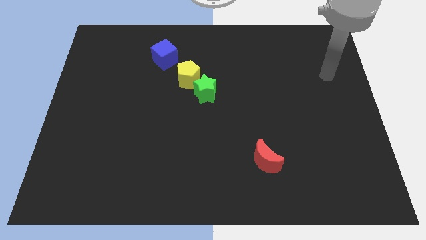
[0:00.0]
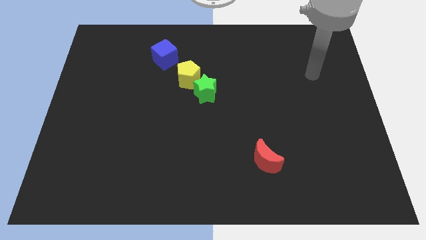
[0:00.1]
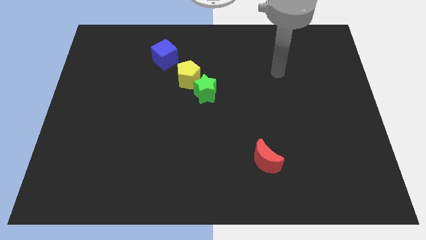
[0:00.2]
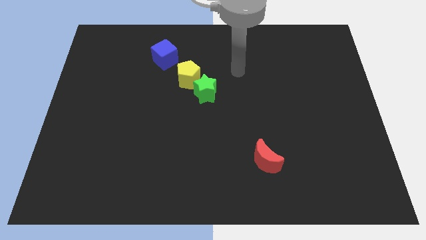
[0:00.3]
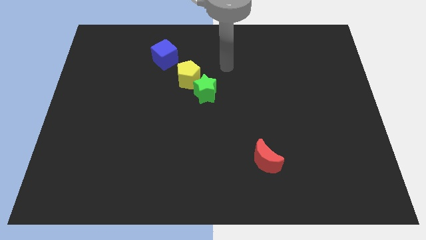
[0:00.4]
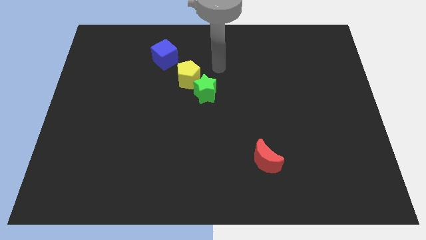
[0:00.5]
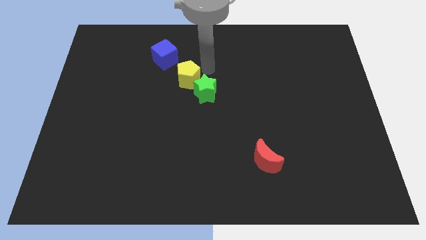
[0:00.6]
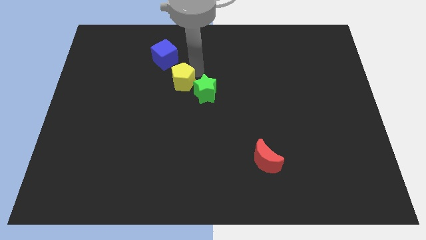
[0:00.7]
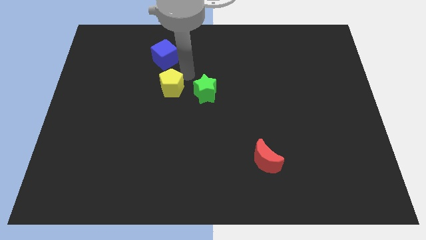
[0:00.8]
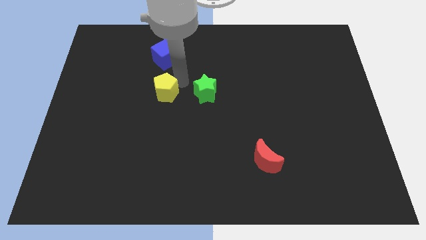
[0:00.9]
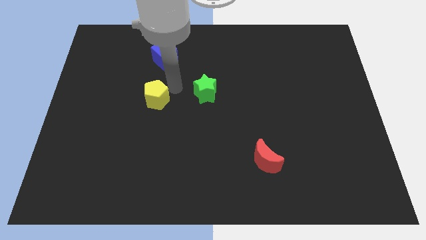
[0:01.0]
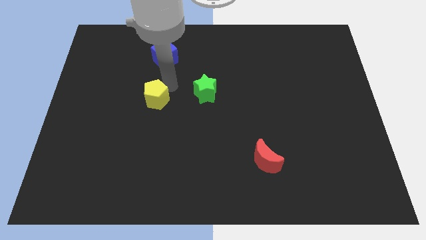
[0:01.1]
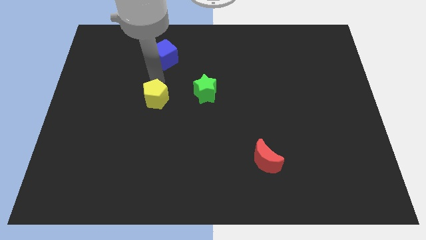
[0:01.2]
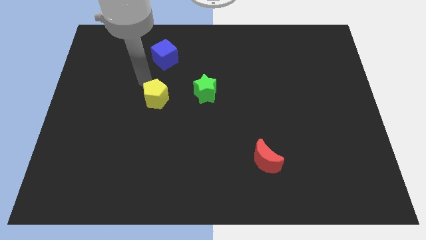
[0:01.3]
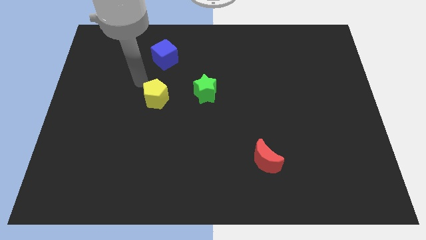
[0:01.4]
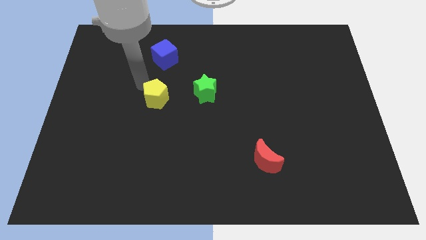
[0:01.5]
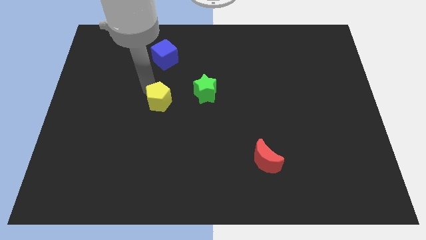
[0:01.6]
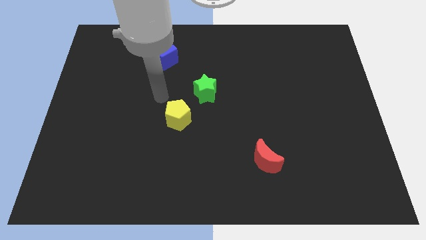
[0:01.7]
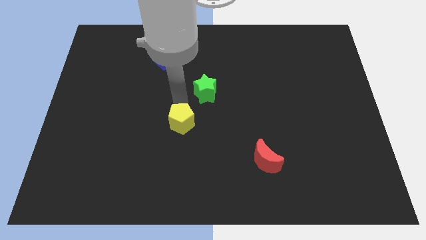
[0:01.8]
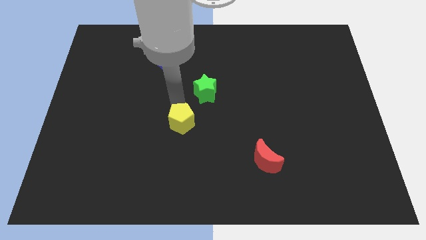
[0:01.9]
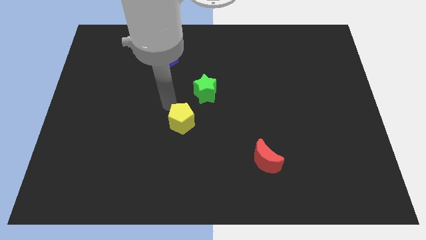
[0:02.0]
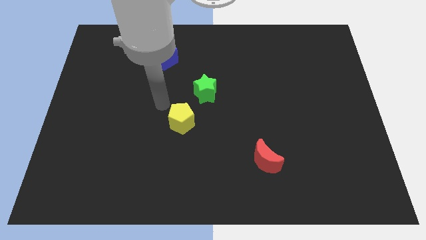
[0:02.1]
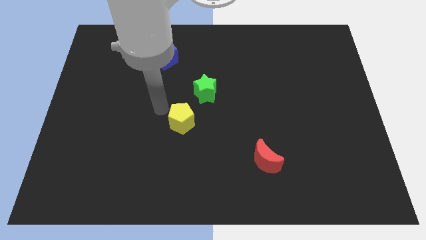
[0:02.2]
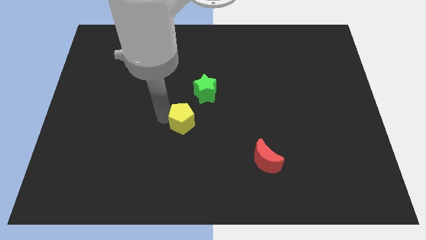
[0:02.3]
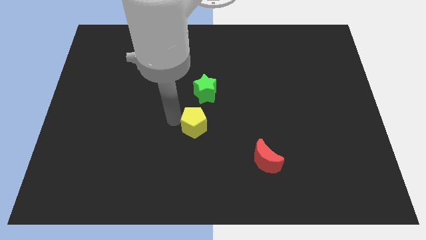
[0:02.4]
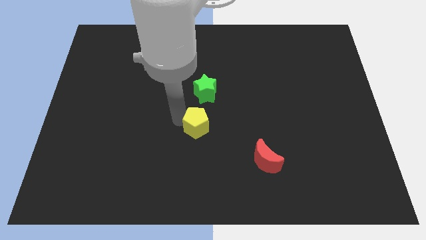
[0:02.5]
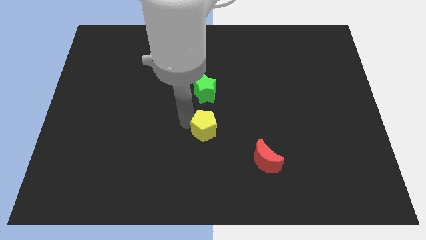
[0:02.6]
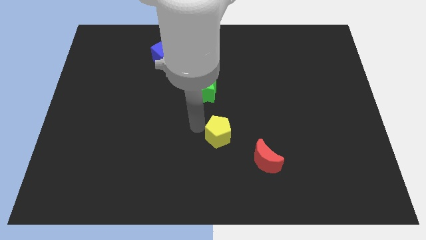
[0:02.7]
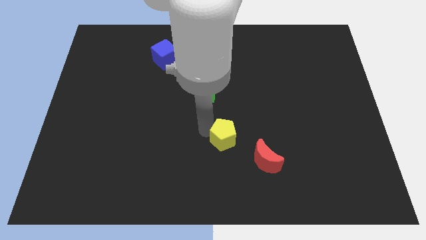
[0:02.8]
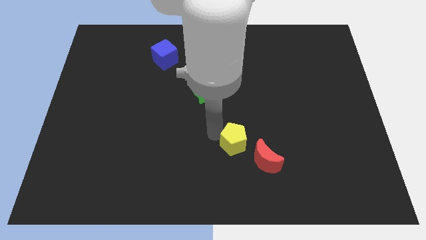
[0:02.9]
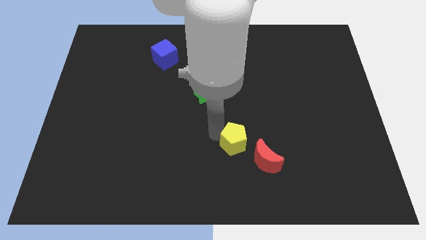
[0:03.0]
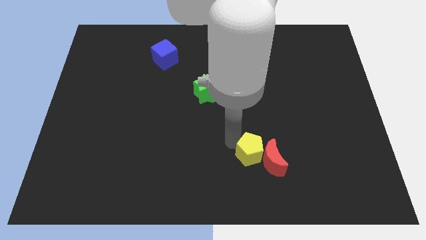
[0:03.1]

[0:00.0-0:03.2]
slide the yellow pentagon to the red block

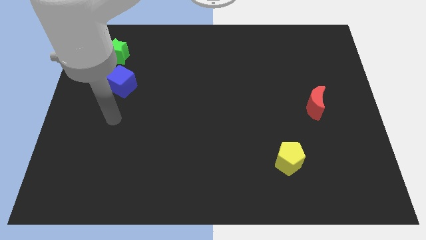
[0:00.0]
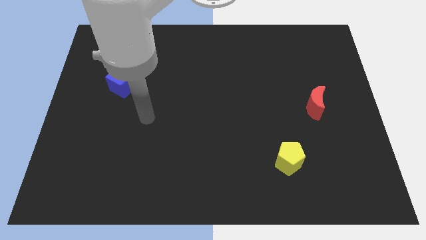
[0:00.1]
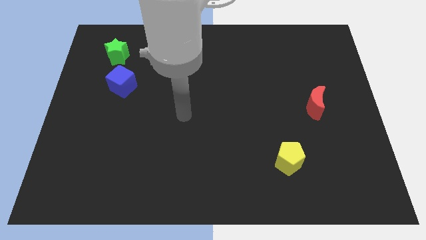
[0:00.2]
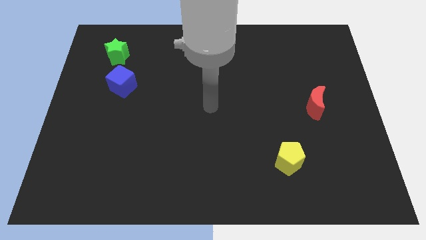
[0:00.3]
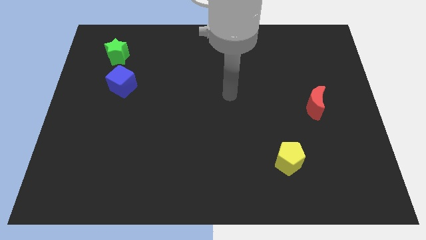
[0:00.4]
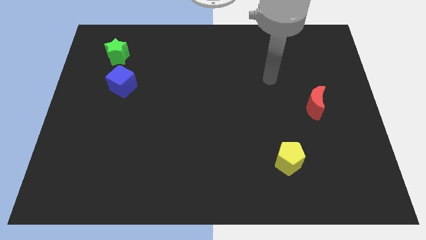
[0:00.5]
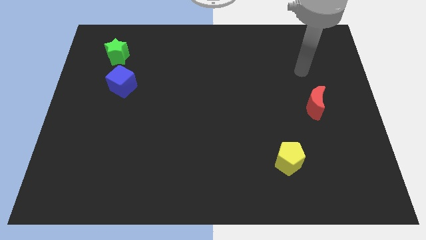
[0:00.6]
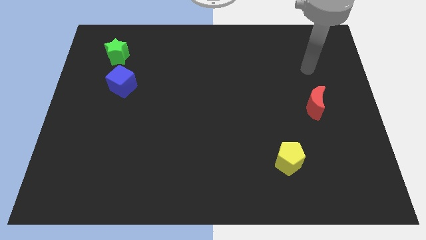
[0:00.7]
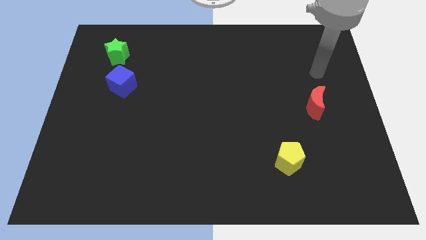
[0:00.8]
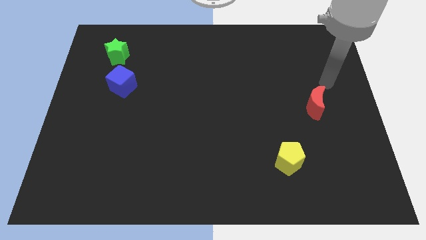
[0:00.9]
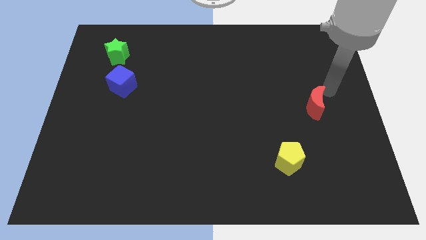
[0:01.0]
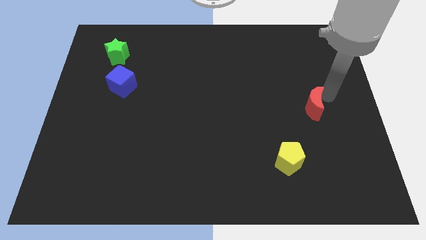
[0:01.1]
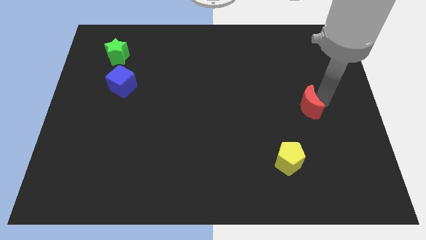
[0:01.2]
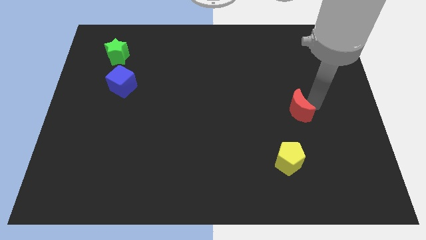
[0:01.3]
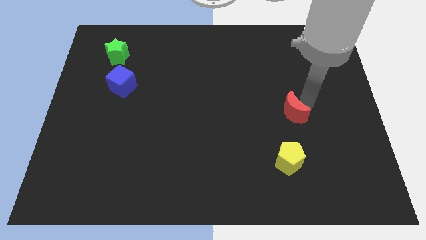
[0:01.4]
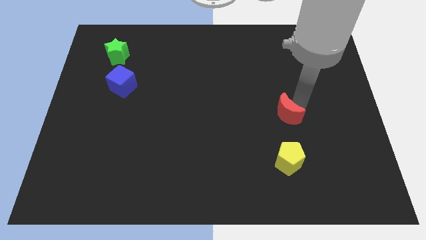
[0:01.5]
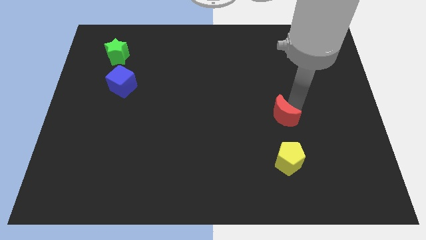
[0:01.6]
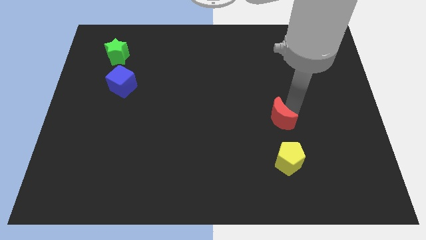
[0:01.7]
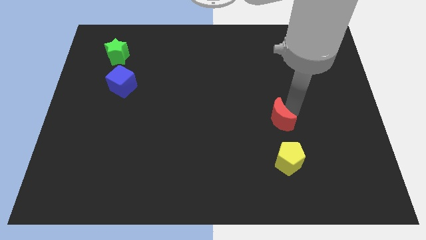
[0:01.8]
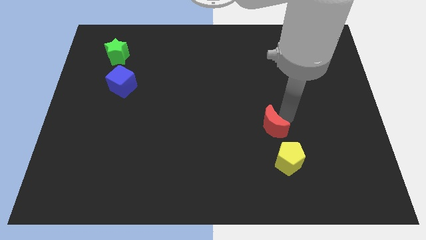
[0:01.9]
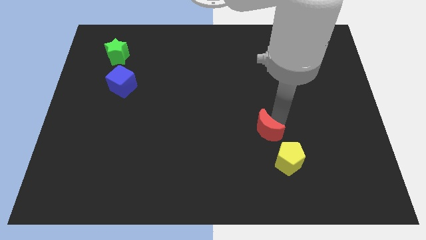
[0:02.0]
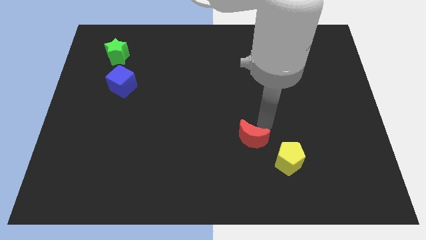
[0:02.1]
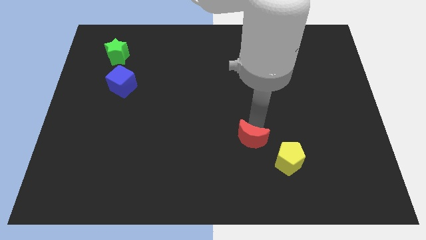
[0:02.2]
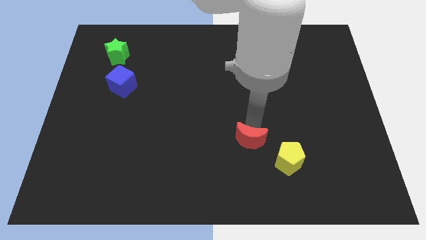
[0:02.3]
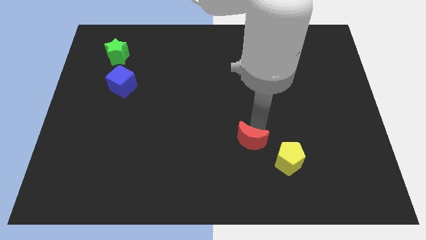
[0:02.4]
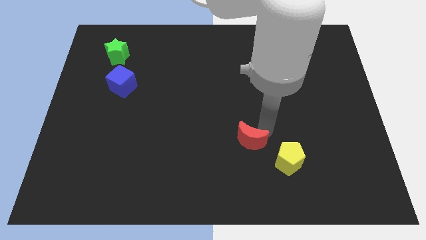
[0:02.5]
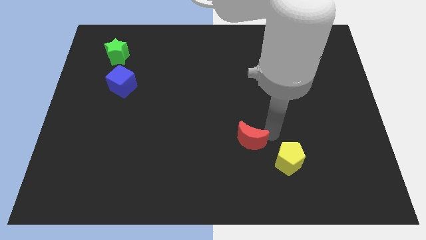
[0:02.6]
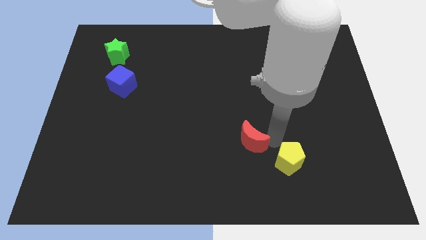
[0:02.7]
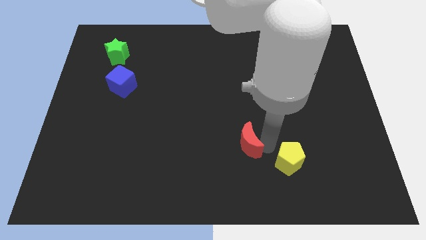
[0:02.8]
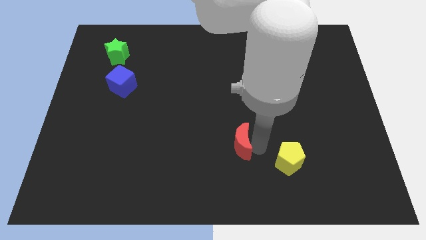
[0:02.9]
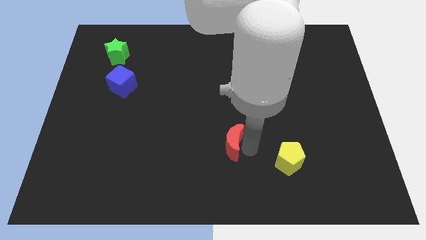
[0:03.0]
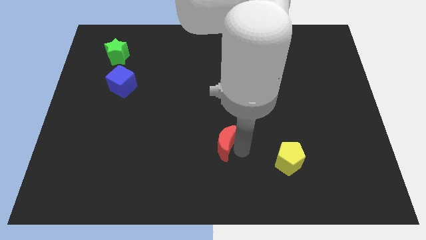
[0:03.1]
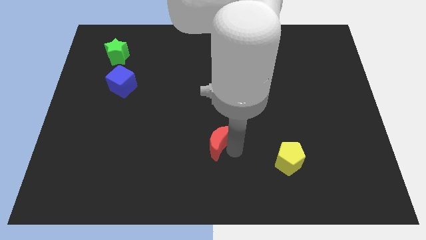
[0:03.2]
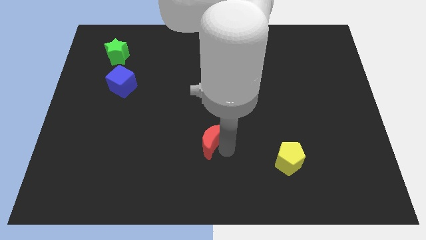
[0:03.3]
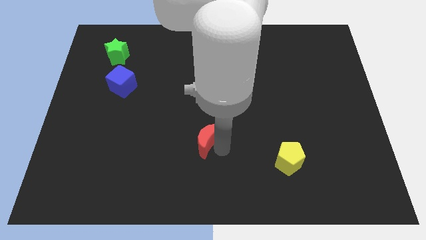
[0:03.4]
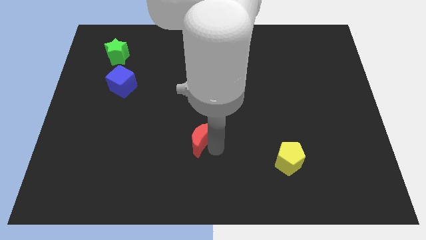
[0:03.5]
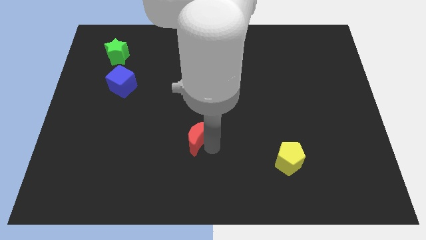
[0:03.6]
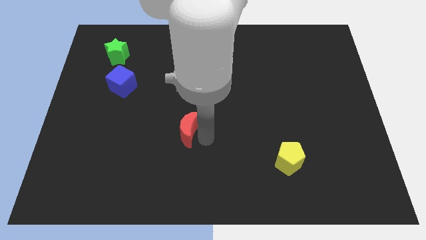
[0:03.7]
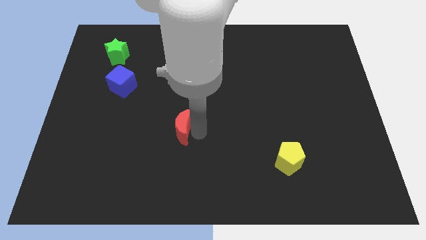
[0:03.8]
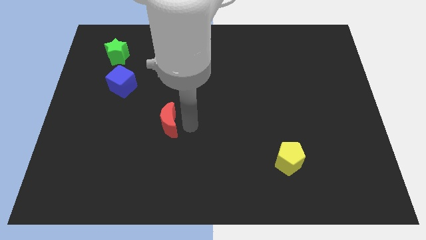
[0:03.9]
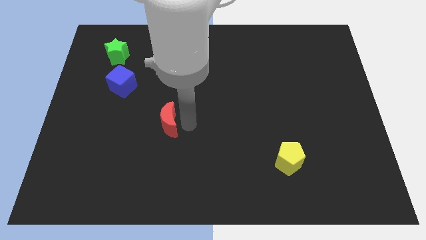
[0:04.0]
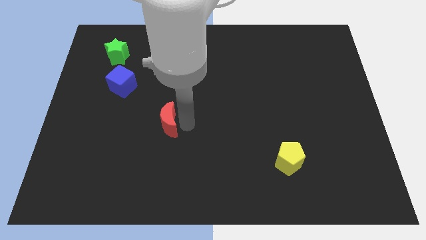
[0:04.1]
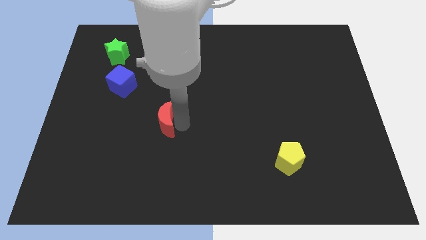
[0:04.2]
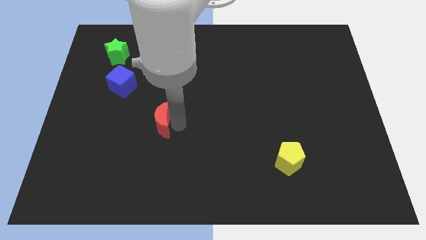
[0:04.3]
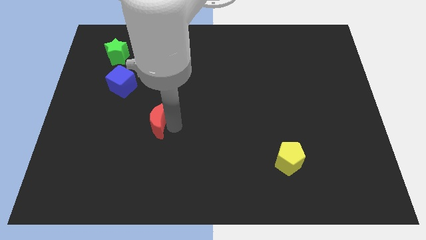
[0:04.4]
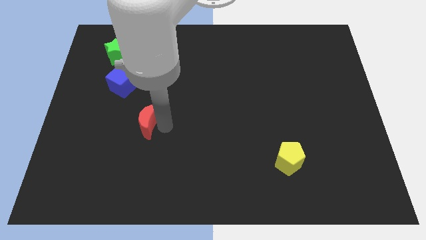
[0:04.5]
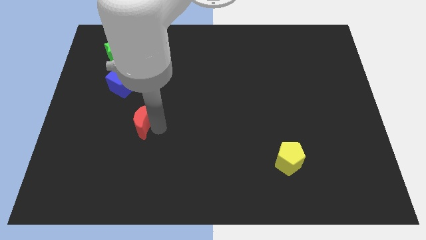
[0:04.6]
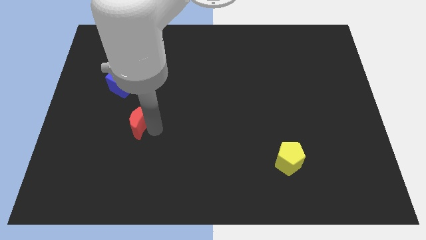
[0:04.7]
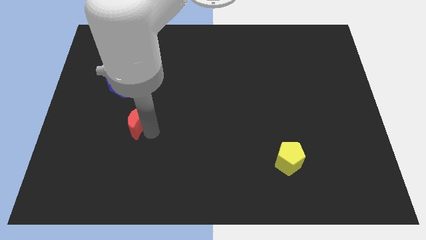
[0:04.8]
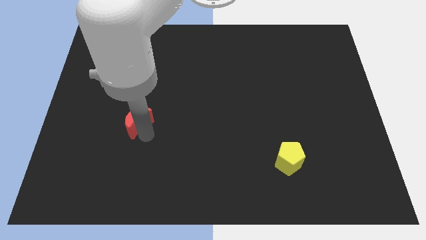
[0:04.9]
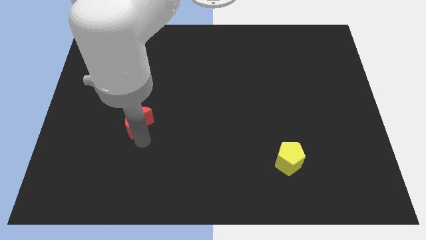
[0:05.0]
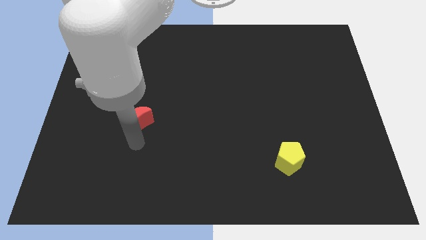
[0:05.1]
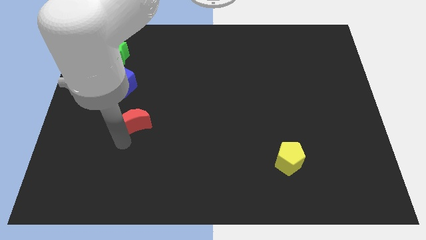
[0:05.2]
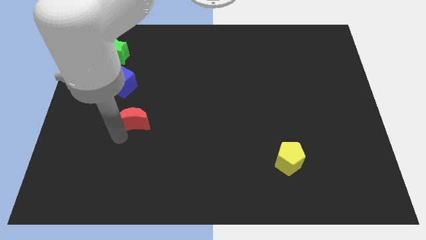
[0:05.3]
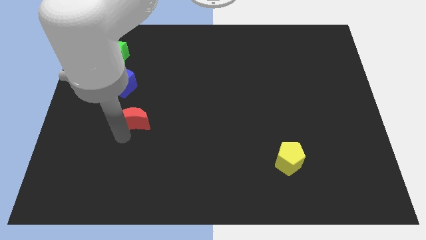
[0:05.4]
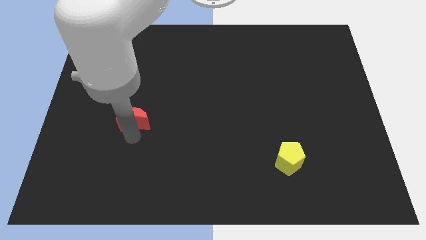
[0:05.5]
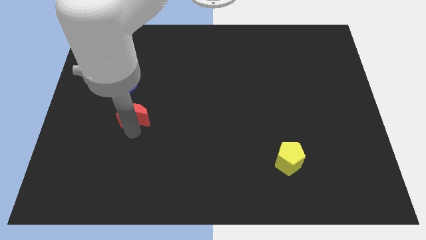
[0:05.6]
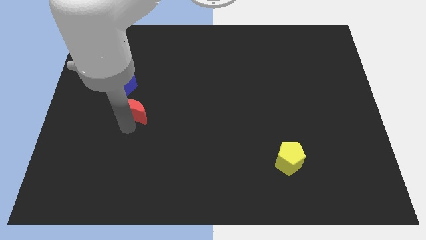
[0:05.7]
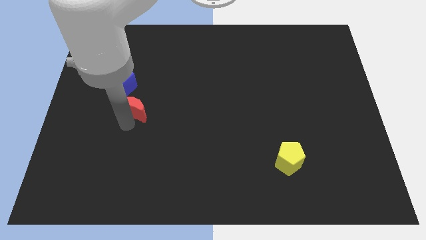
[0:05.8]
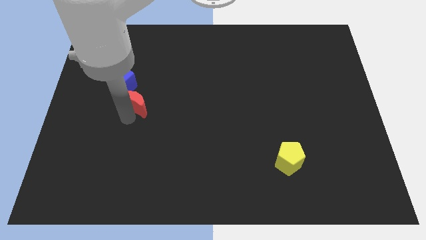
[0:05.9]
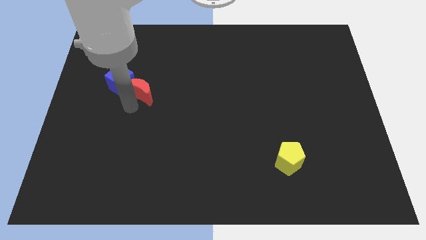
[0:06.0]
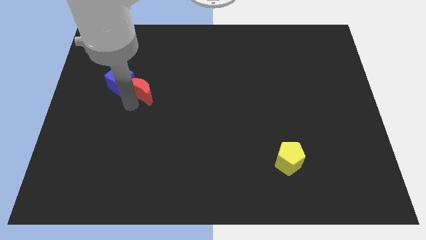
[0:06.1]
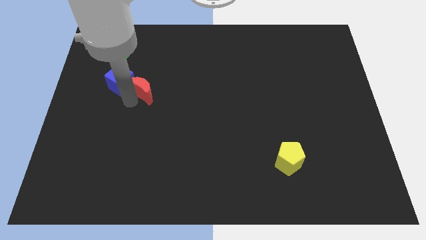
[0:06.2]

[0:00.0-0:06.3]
put the moon next to the blue cube
